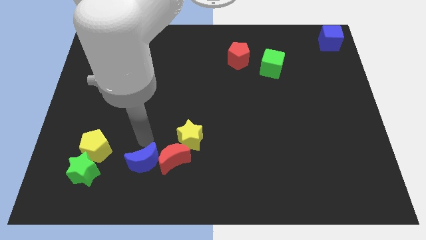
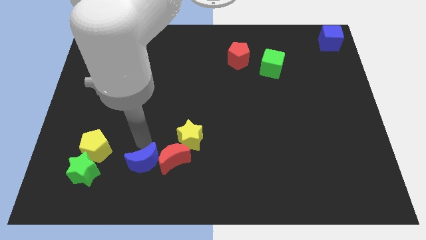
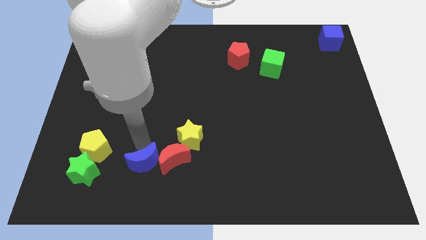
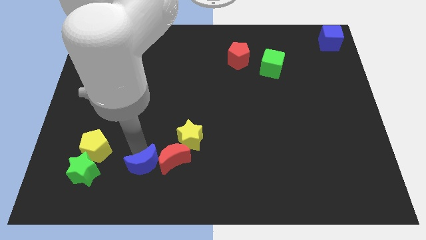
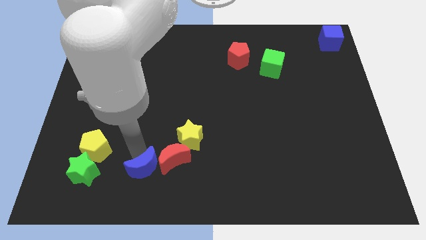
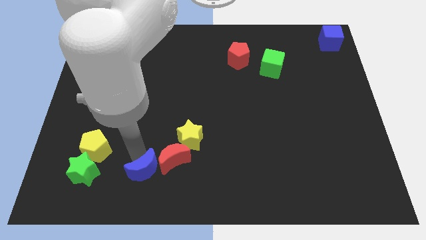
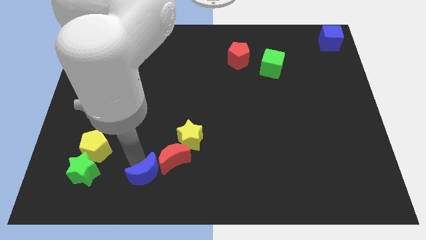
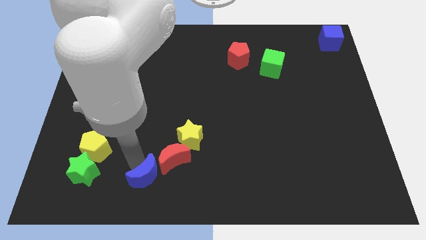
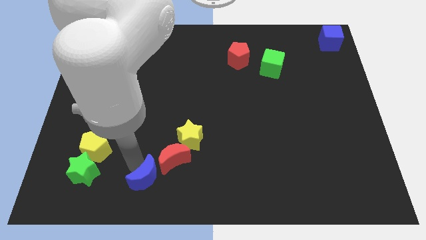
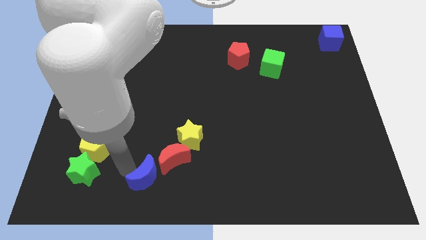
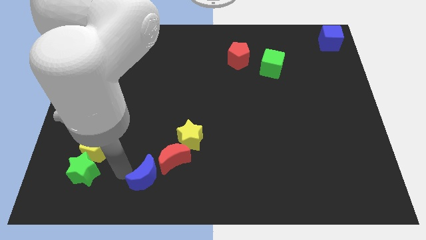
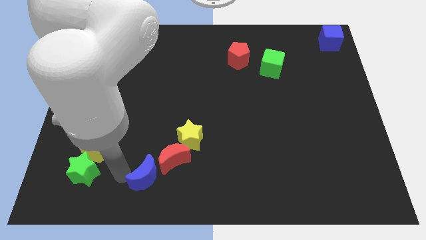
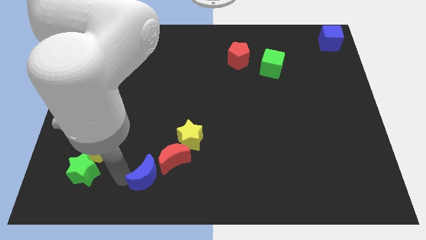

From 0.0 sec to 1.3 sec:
push blue moon slightly downwards

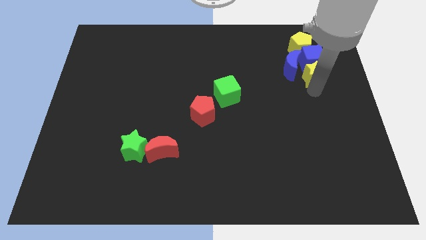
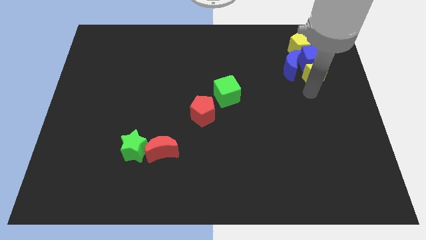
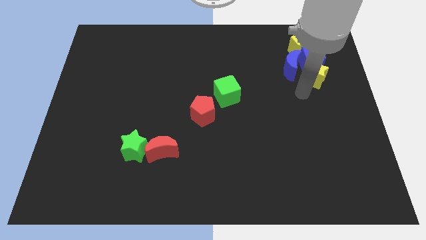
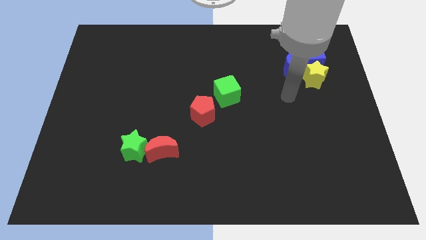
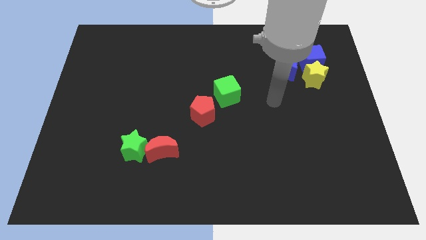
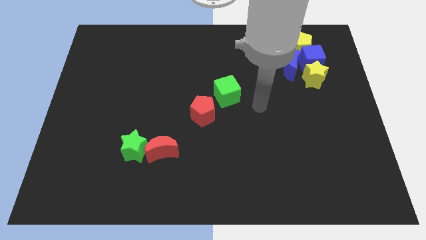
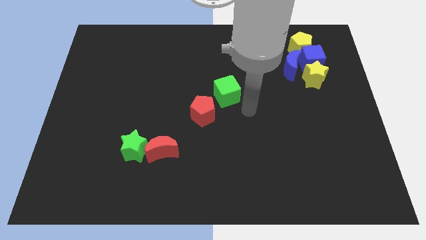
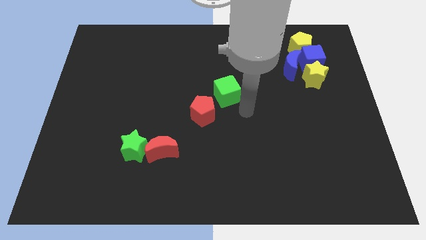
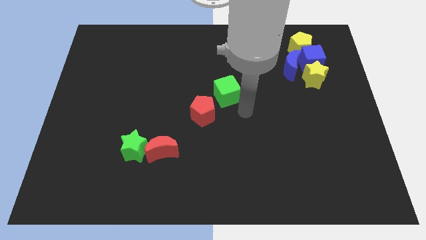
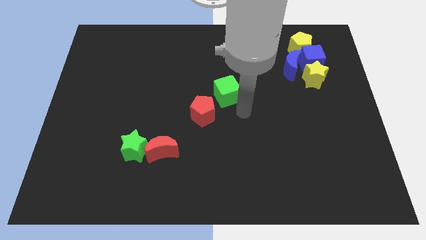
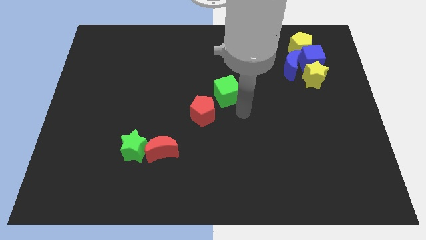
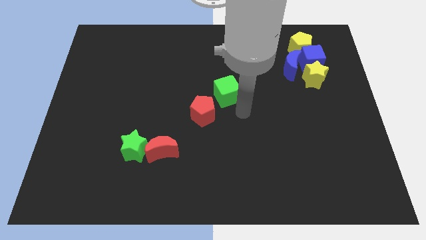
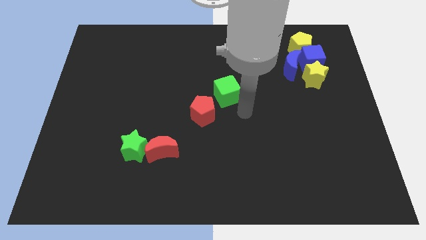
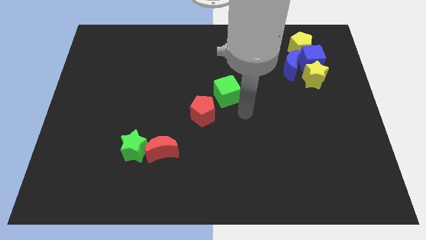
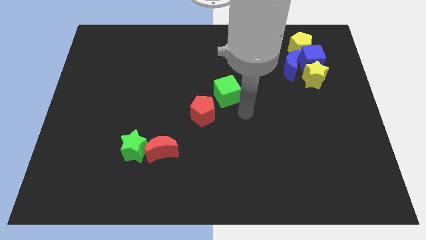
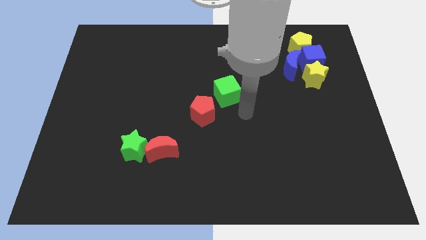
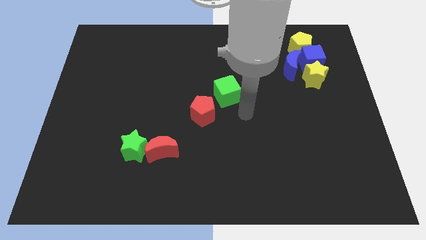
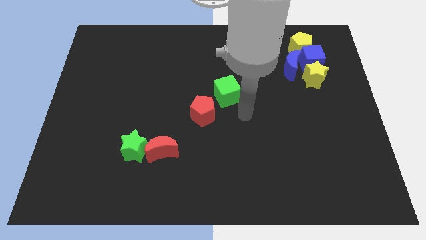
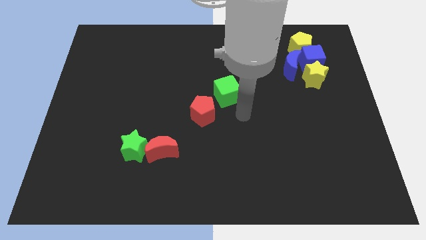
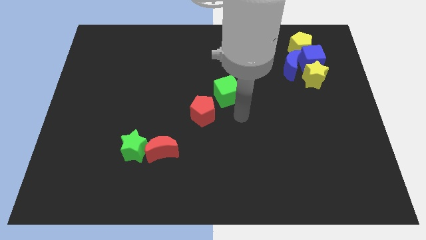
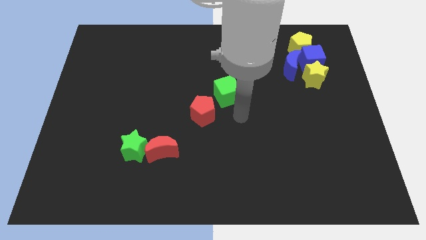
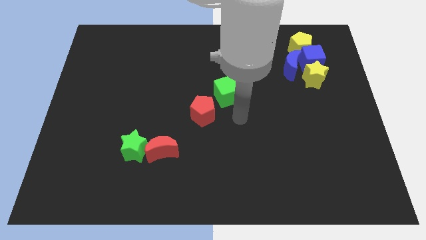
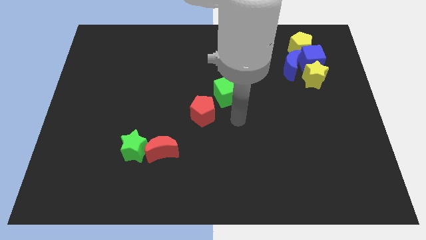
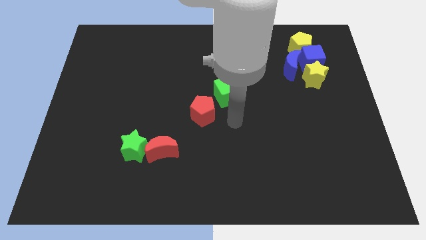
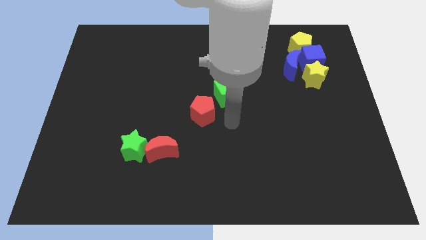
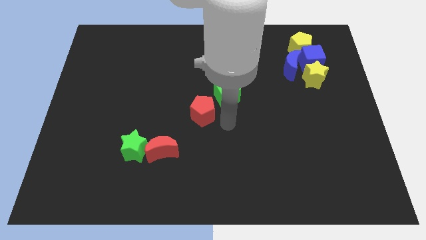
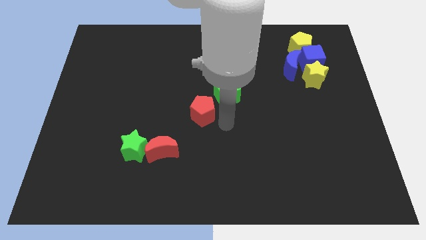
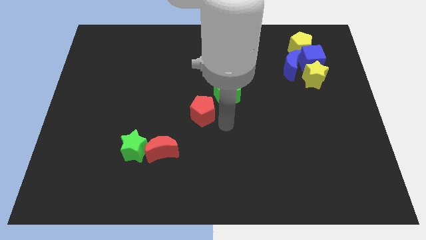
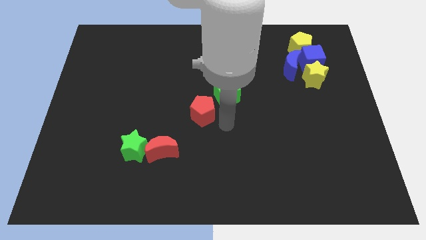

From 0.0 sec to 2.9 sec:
move the arm right to the red pentagon

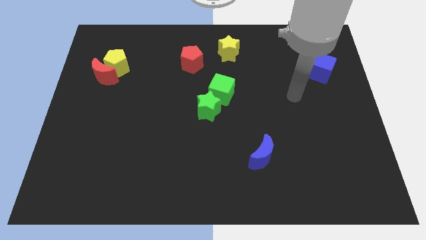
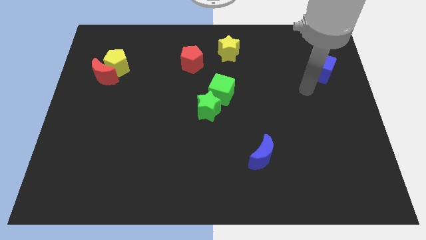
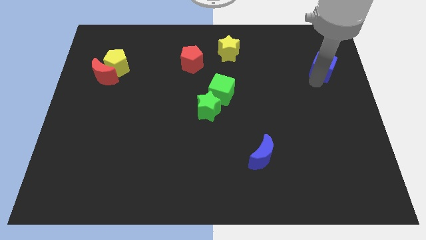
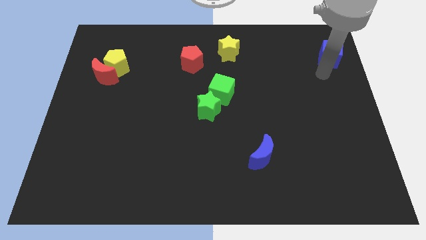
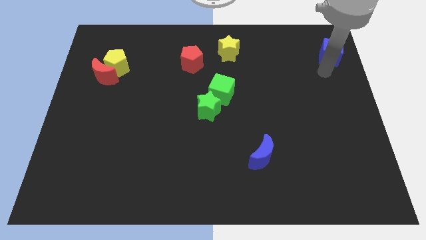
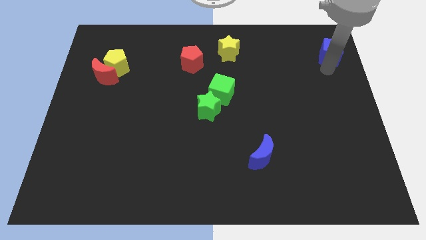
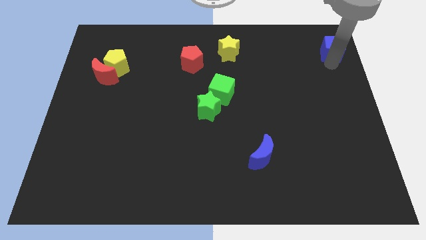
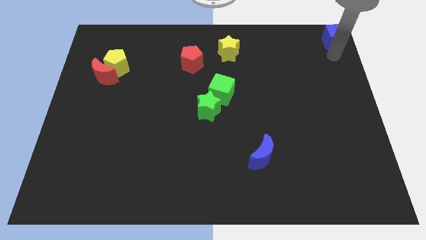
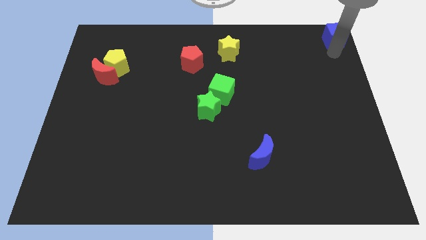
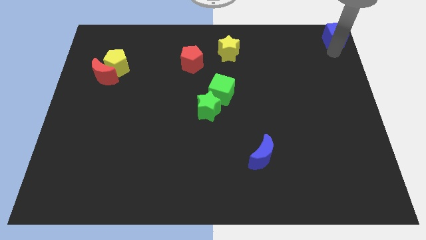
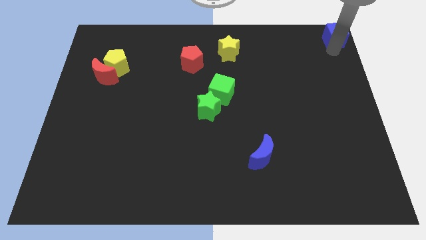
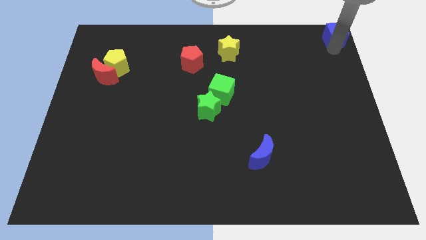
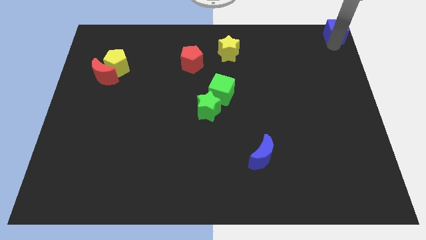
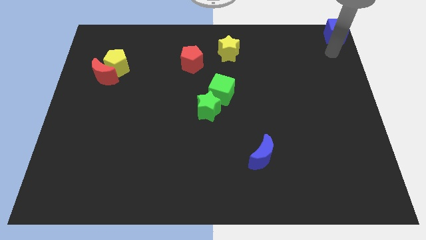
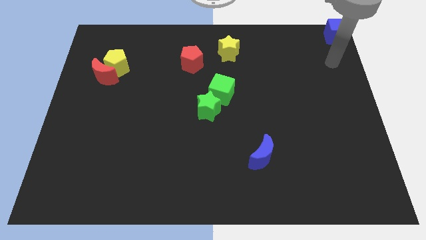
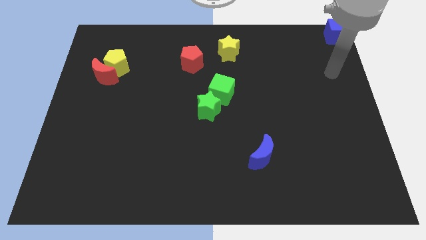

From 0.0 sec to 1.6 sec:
move the blue cube to the top right of the board

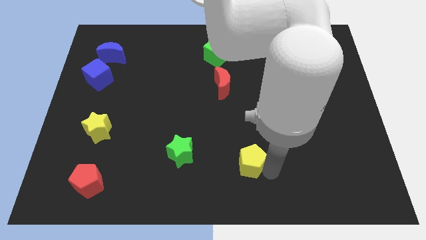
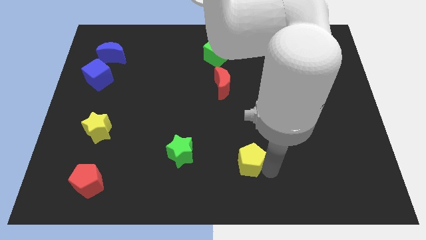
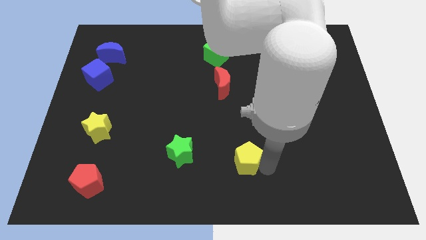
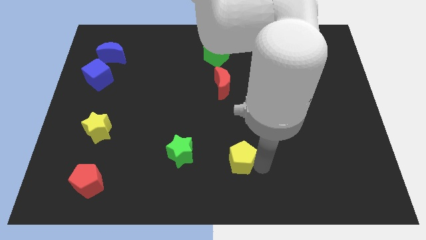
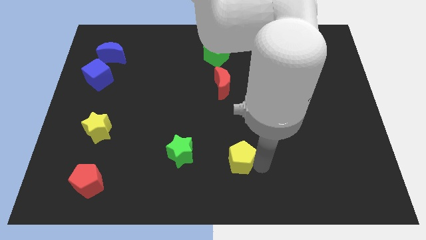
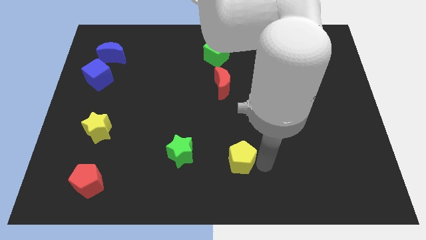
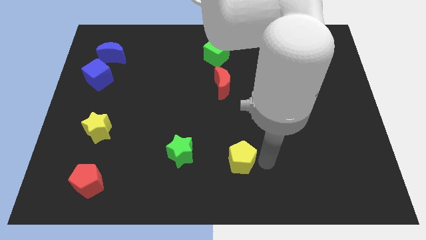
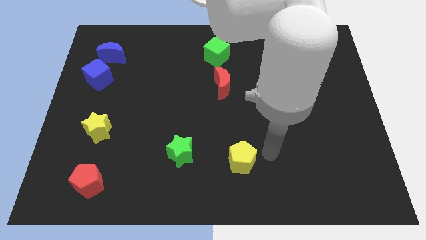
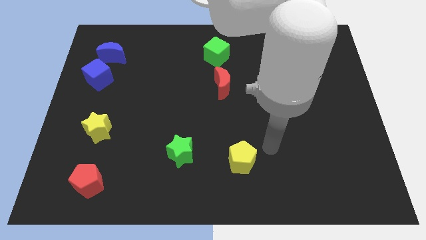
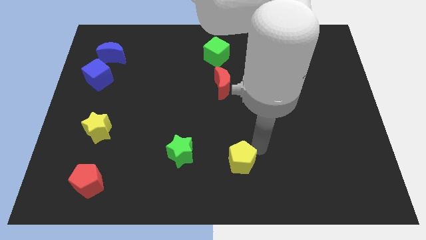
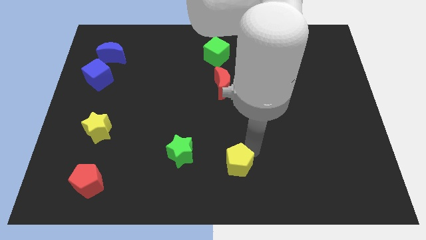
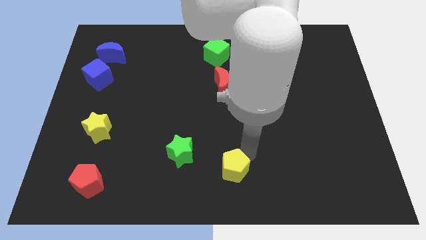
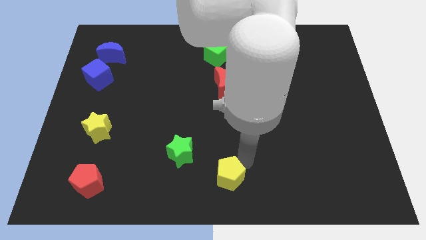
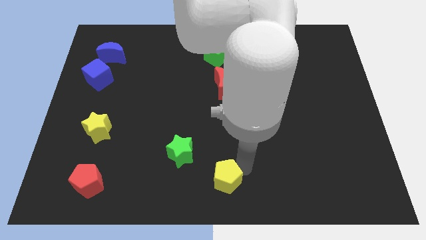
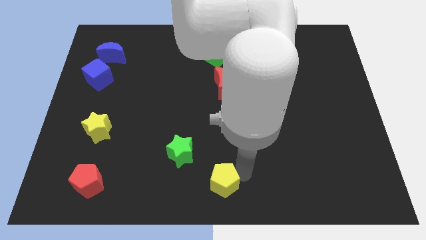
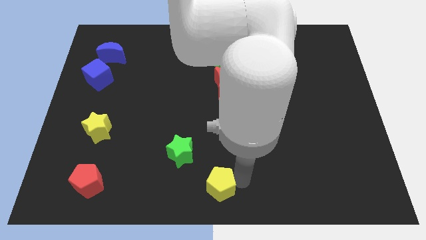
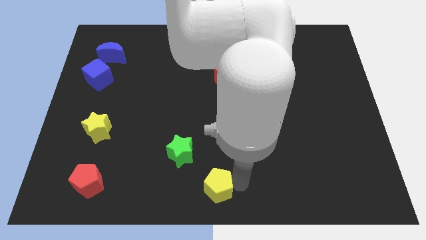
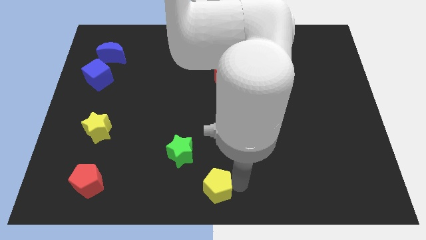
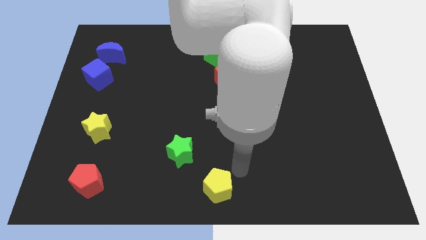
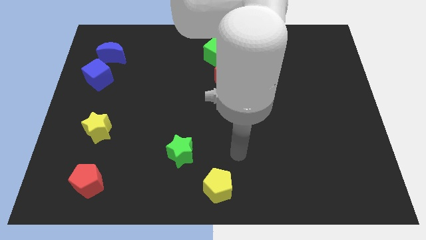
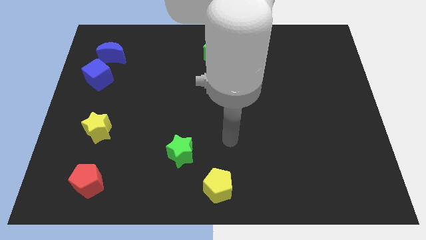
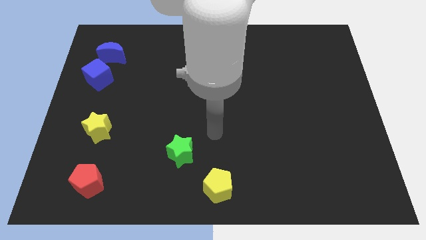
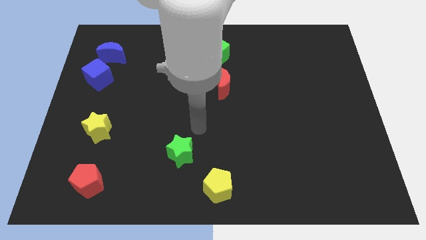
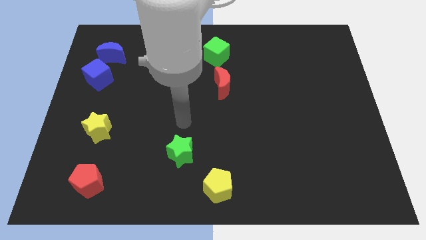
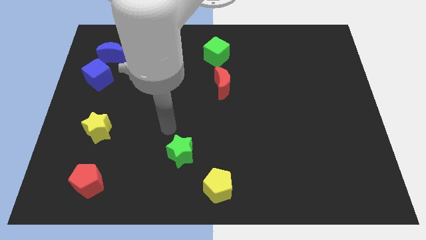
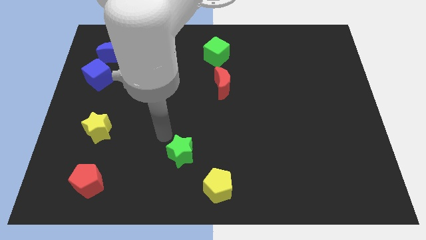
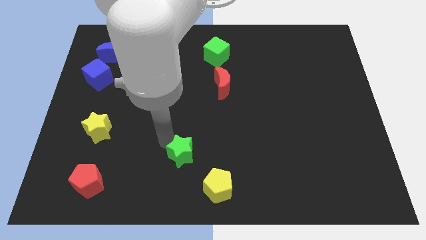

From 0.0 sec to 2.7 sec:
drag the yellow pentagon towards the bottom

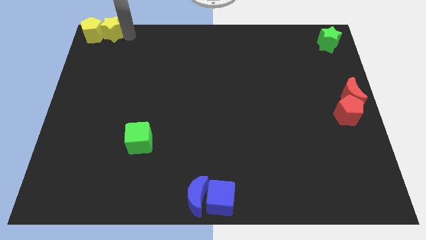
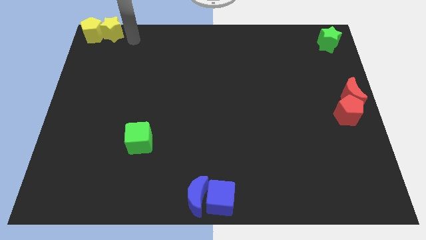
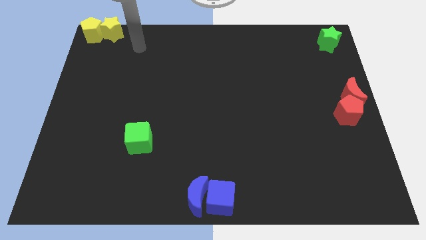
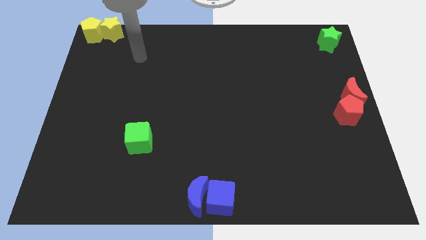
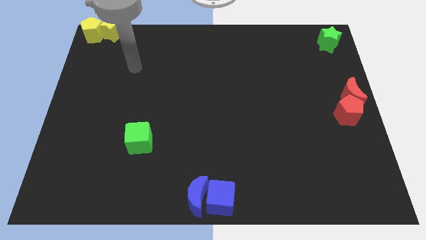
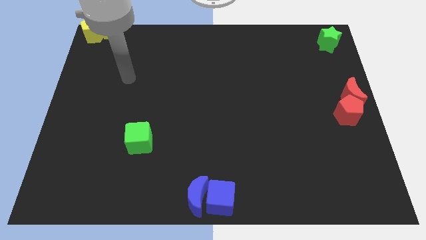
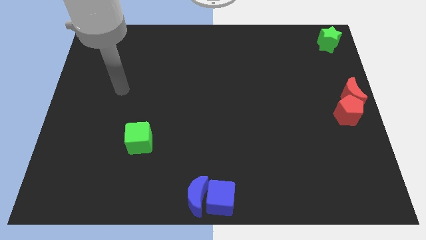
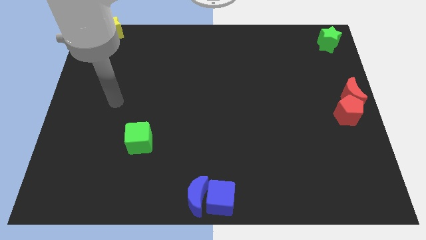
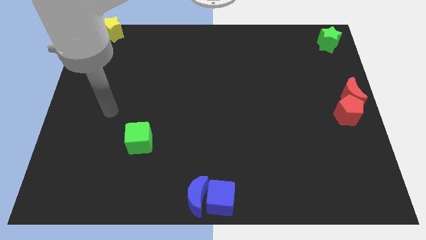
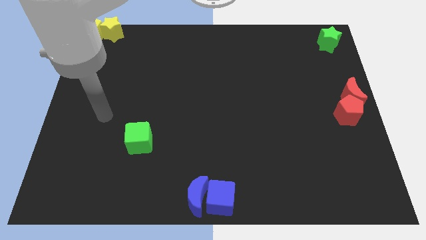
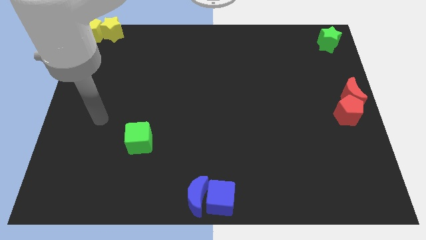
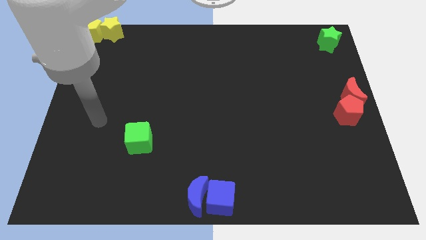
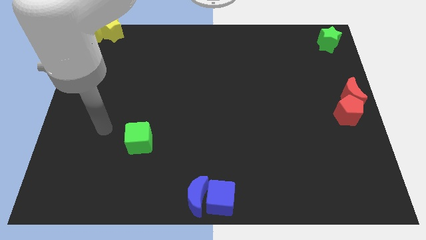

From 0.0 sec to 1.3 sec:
move the arm away from the yellow star
